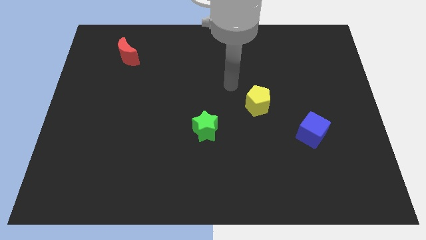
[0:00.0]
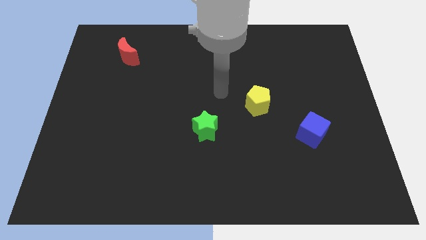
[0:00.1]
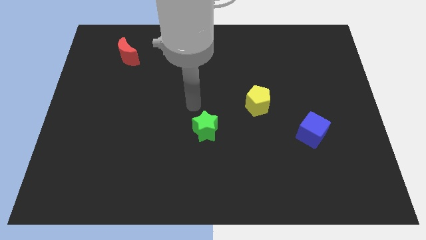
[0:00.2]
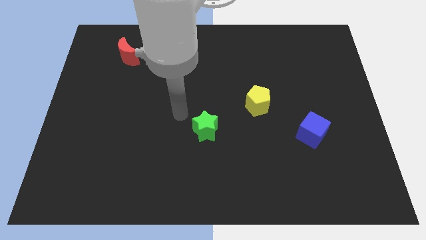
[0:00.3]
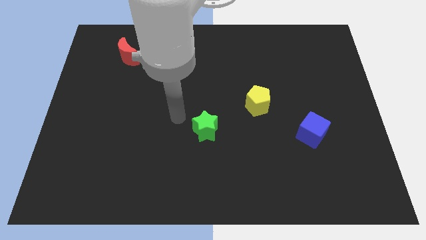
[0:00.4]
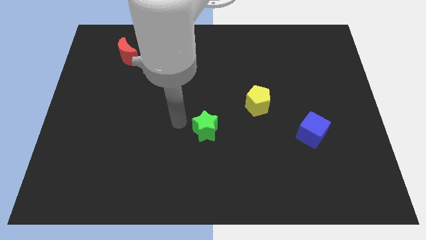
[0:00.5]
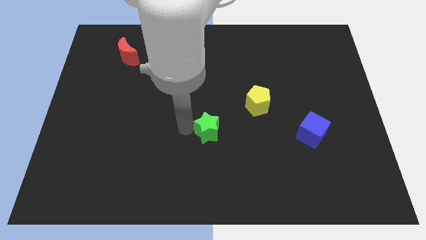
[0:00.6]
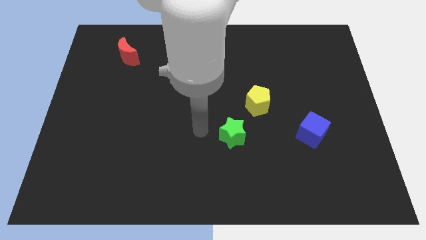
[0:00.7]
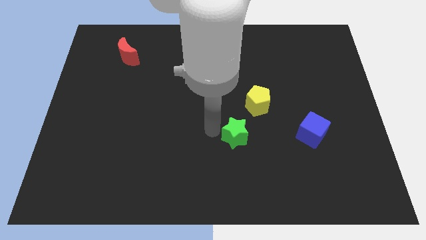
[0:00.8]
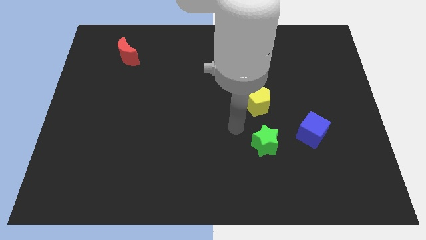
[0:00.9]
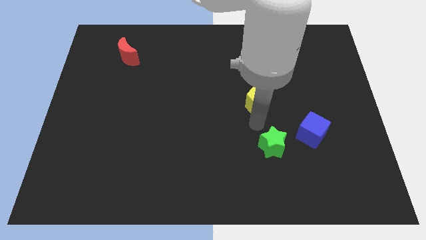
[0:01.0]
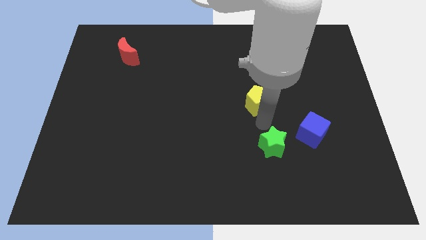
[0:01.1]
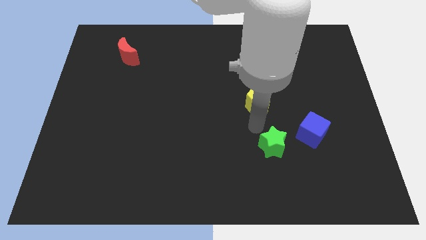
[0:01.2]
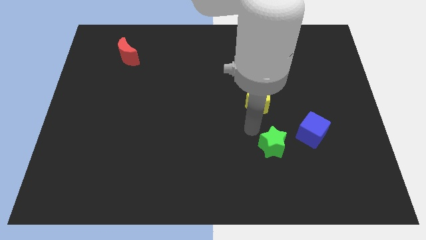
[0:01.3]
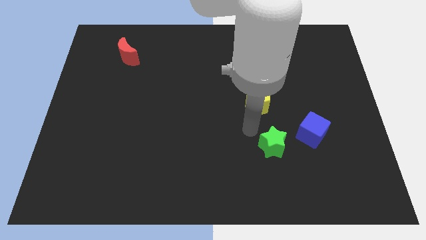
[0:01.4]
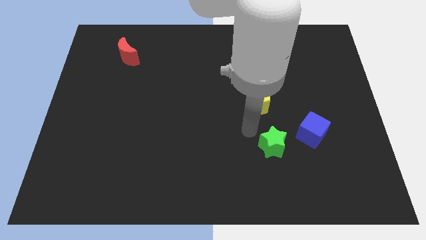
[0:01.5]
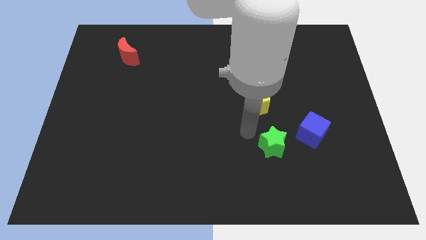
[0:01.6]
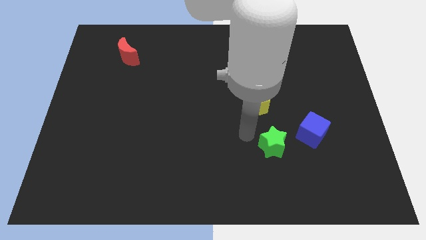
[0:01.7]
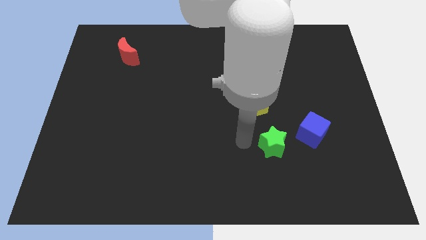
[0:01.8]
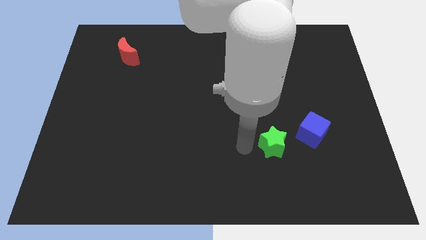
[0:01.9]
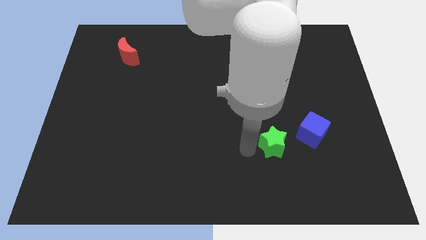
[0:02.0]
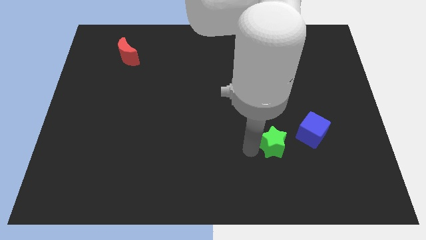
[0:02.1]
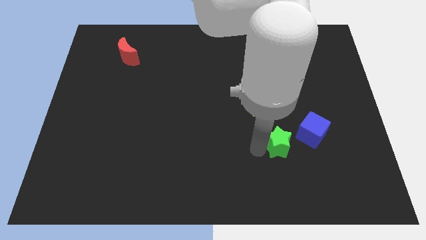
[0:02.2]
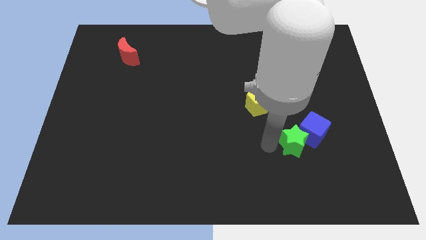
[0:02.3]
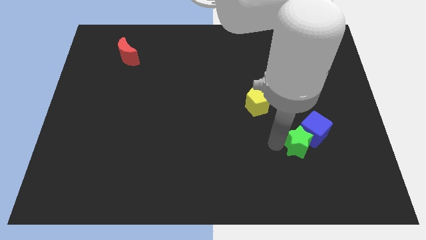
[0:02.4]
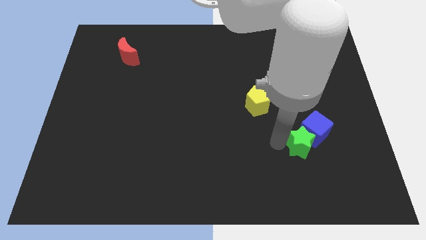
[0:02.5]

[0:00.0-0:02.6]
push the green star to the cube

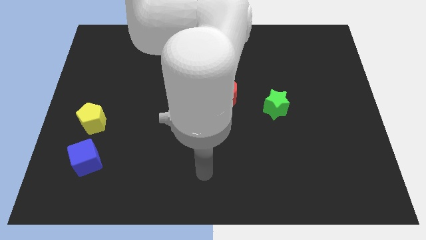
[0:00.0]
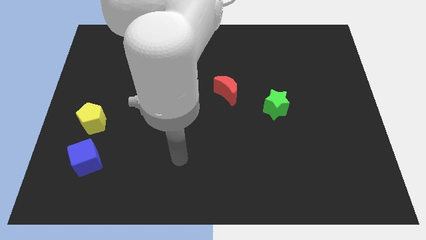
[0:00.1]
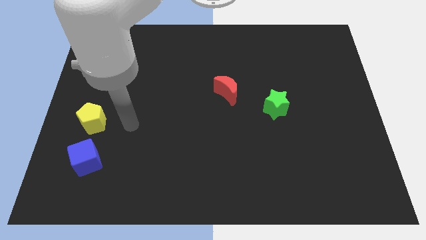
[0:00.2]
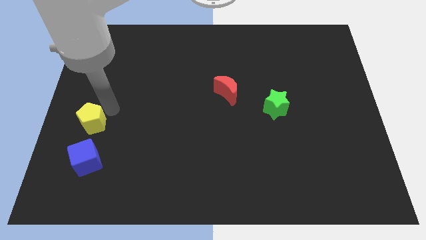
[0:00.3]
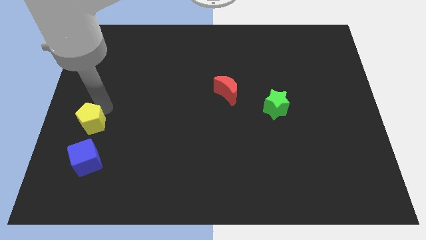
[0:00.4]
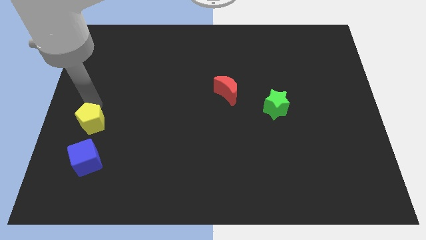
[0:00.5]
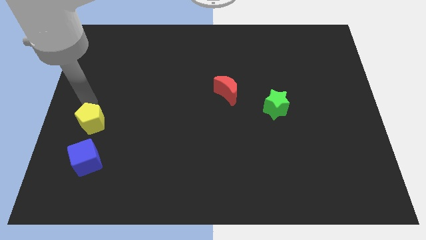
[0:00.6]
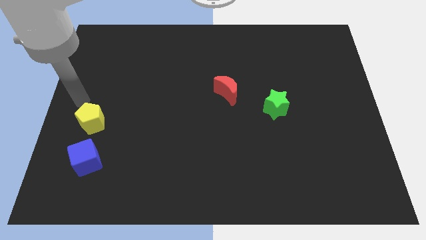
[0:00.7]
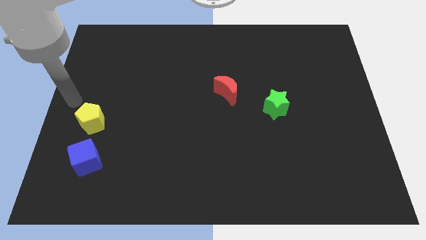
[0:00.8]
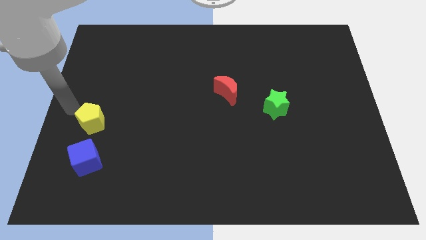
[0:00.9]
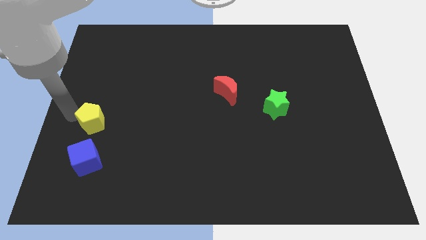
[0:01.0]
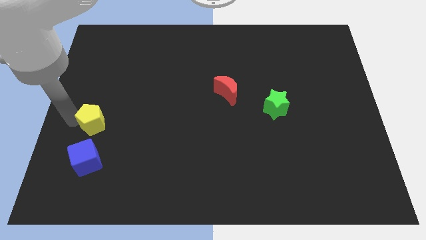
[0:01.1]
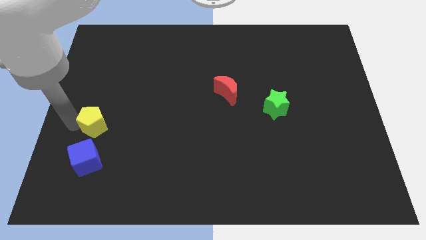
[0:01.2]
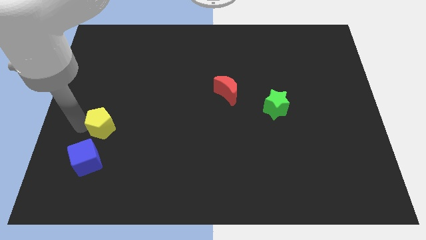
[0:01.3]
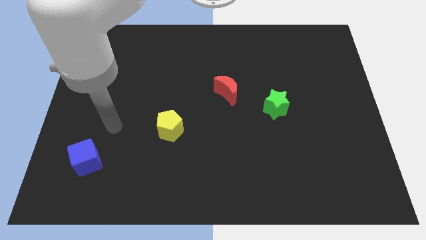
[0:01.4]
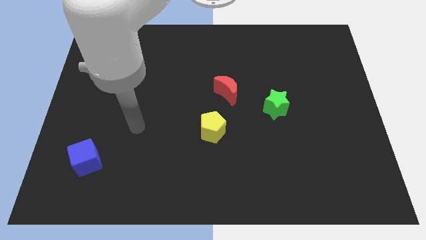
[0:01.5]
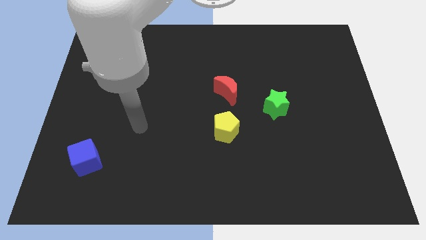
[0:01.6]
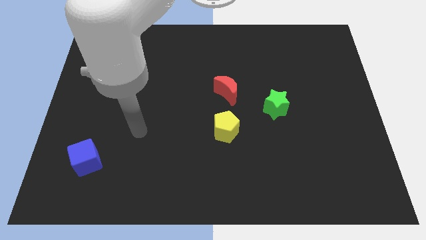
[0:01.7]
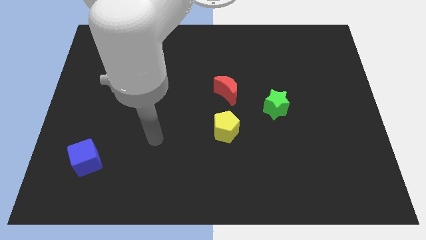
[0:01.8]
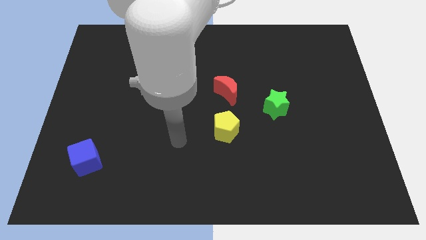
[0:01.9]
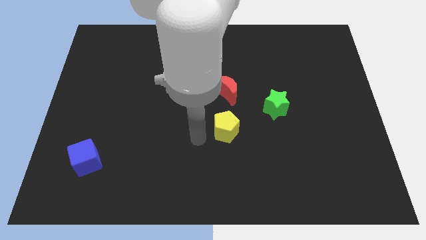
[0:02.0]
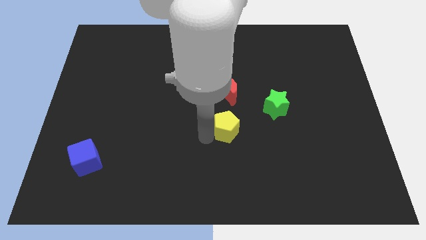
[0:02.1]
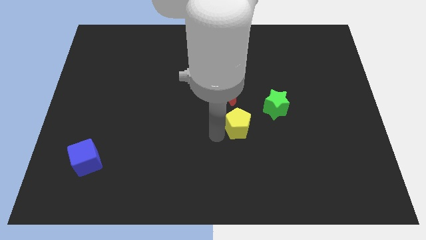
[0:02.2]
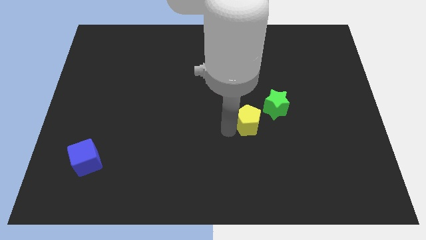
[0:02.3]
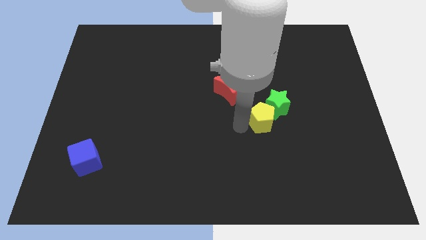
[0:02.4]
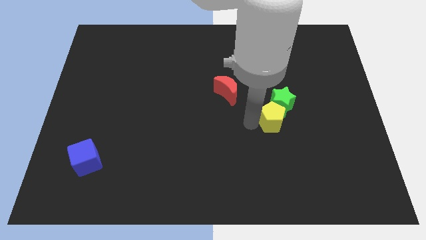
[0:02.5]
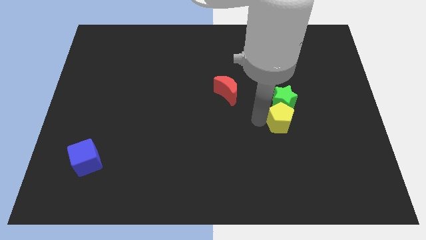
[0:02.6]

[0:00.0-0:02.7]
move the pentagon towards the green star

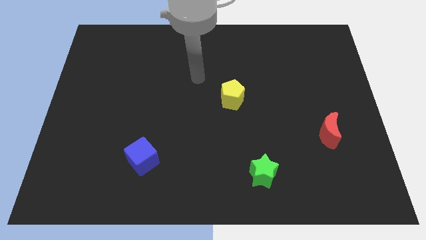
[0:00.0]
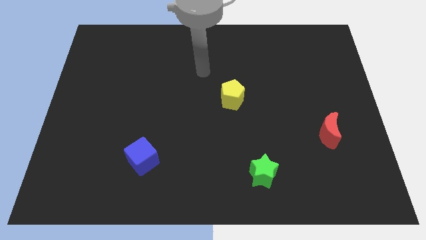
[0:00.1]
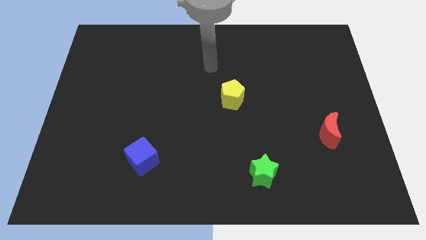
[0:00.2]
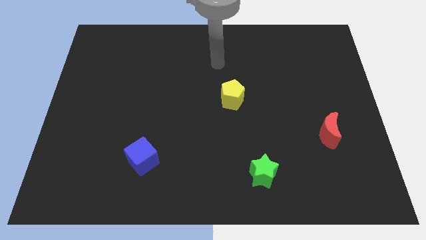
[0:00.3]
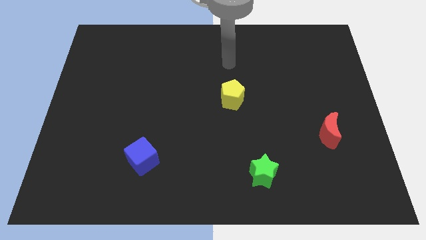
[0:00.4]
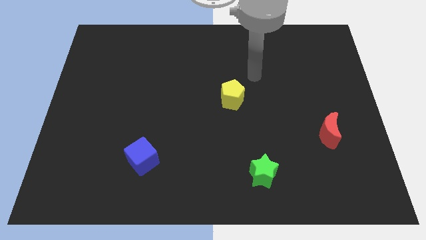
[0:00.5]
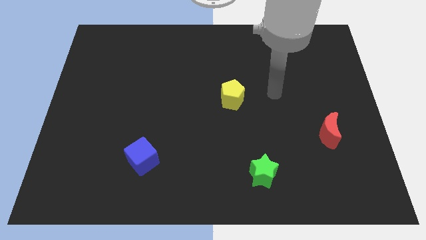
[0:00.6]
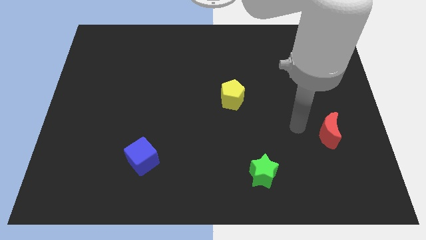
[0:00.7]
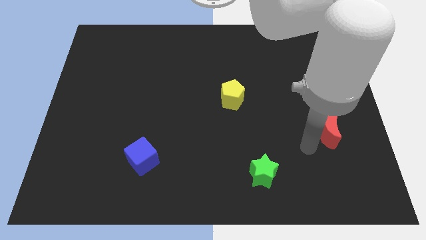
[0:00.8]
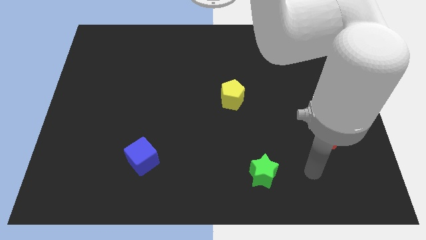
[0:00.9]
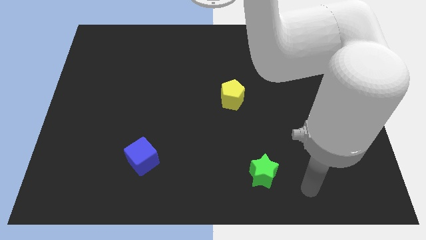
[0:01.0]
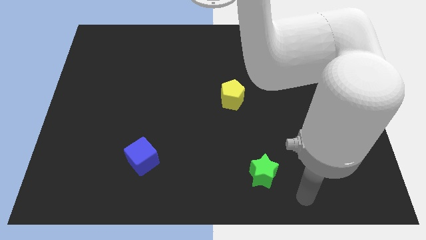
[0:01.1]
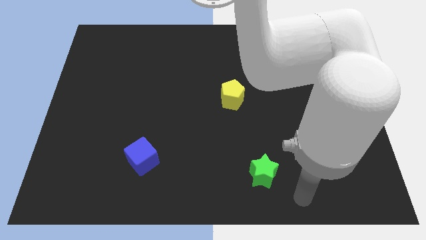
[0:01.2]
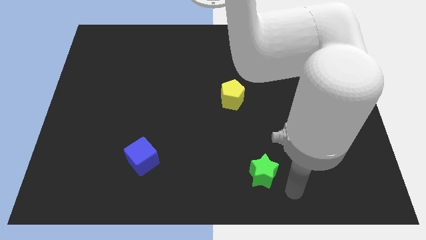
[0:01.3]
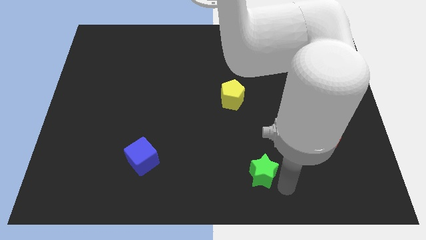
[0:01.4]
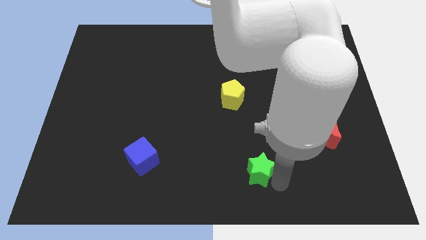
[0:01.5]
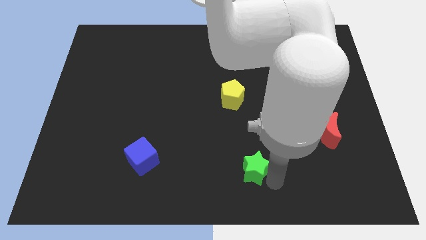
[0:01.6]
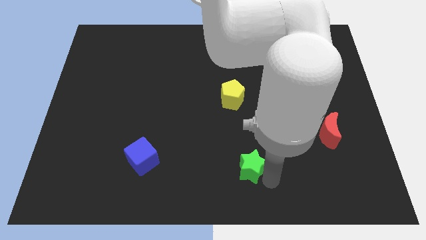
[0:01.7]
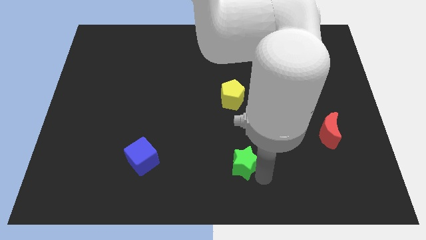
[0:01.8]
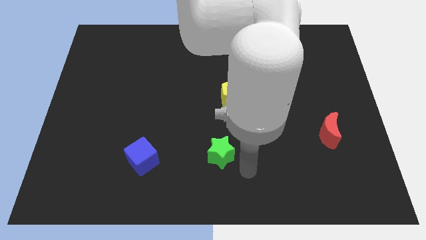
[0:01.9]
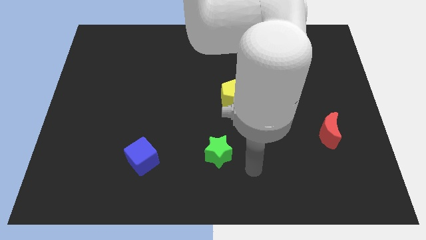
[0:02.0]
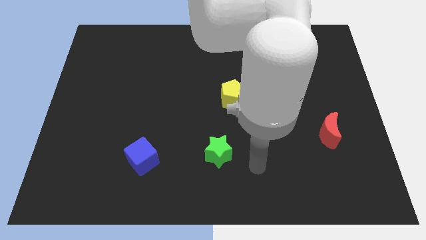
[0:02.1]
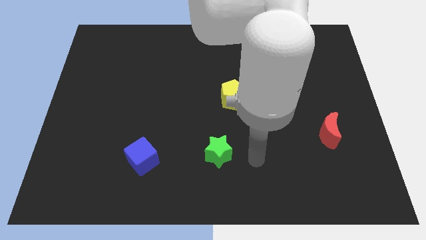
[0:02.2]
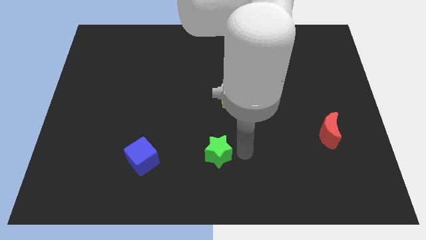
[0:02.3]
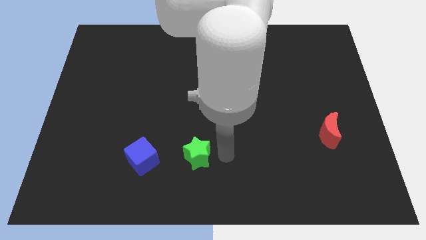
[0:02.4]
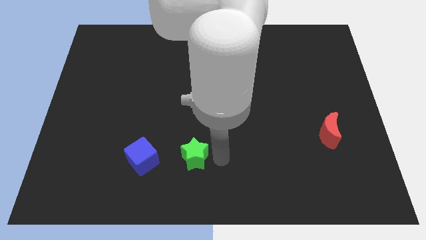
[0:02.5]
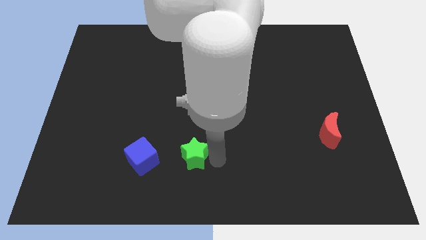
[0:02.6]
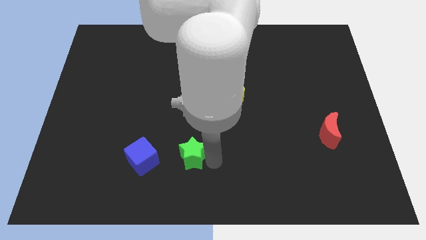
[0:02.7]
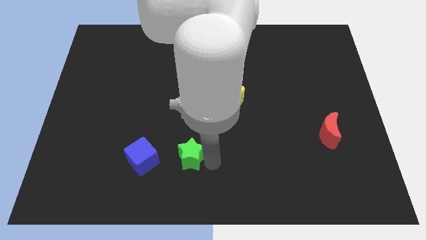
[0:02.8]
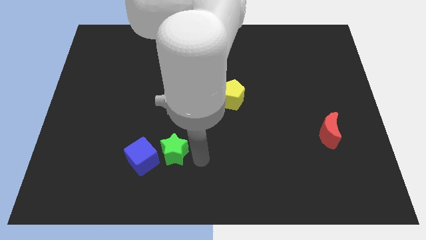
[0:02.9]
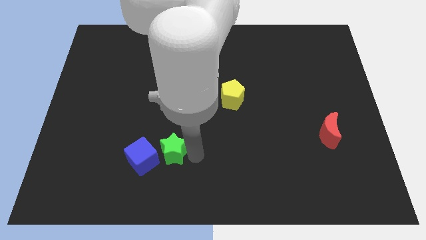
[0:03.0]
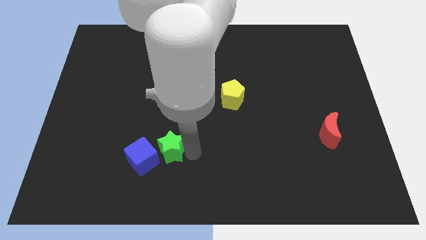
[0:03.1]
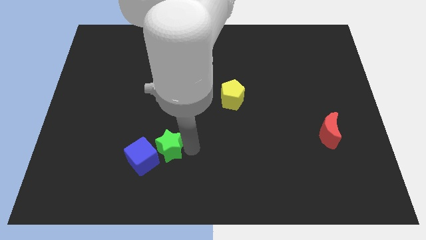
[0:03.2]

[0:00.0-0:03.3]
put the green star towards the cube
